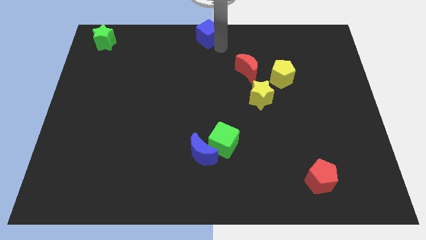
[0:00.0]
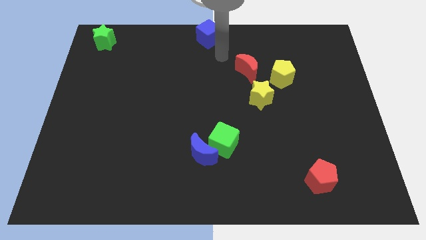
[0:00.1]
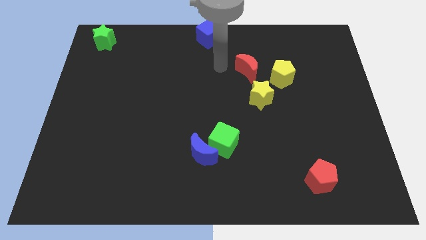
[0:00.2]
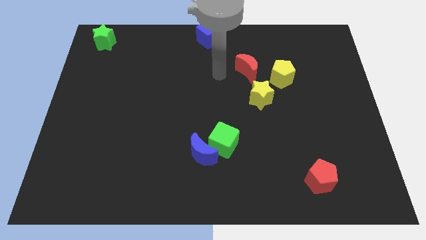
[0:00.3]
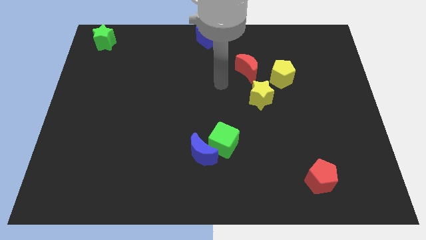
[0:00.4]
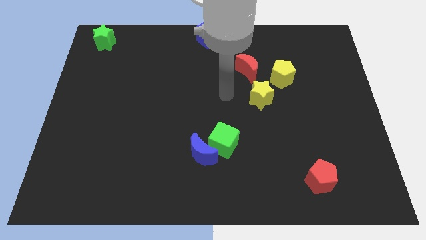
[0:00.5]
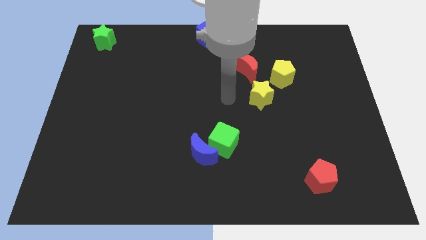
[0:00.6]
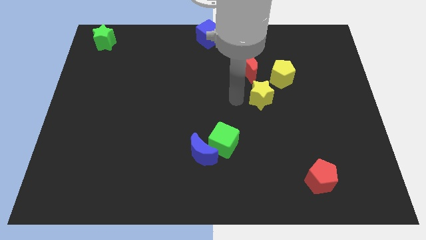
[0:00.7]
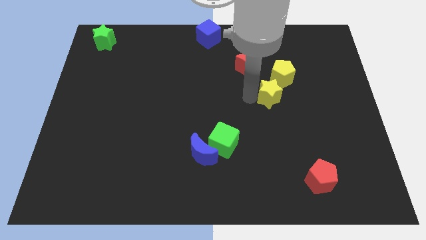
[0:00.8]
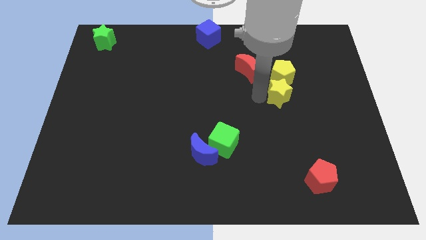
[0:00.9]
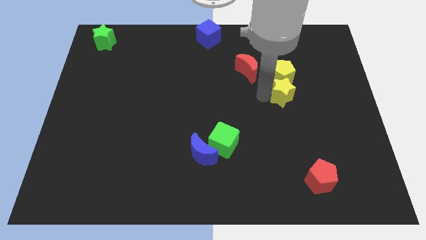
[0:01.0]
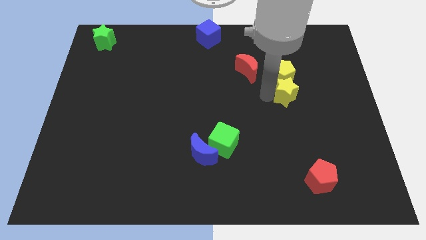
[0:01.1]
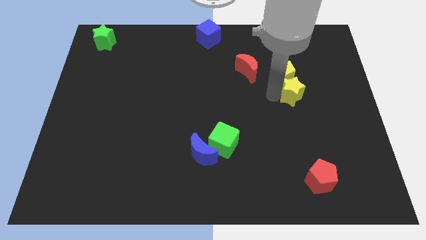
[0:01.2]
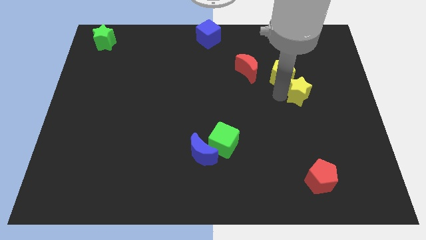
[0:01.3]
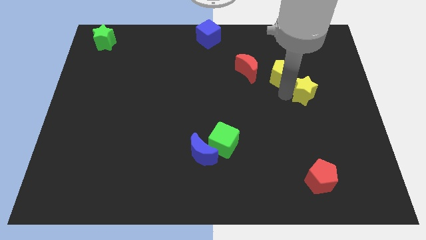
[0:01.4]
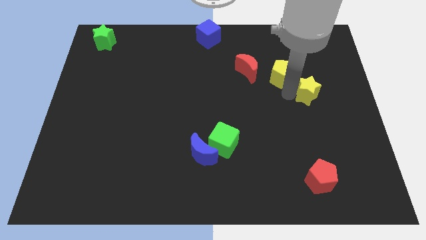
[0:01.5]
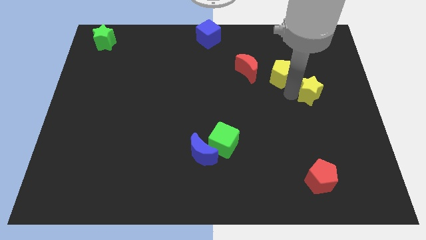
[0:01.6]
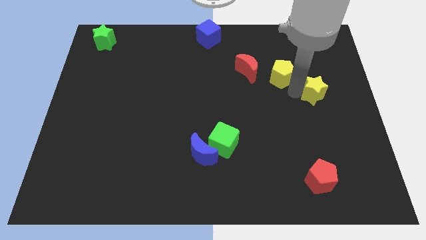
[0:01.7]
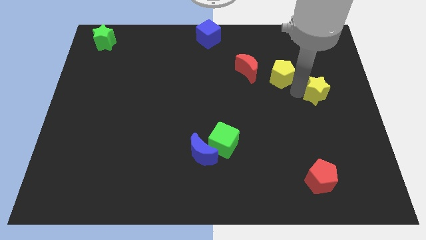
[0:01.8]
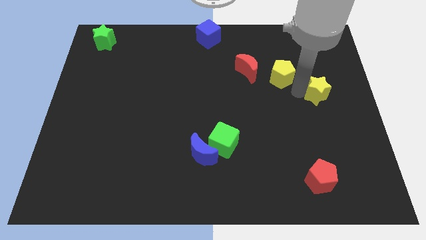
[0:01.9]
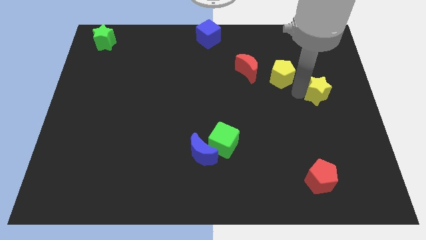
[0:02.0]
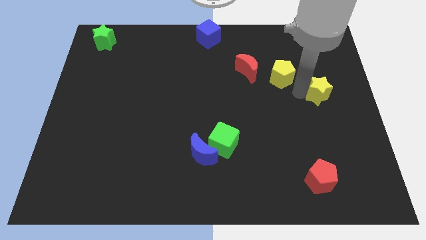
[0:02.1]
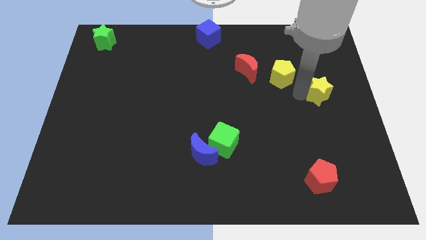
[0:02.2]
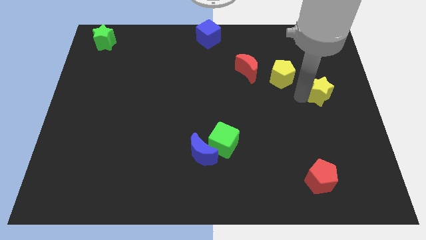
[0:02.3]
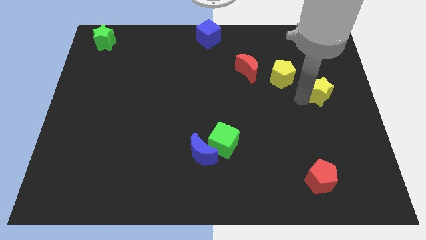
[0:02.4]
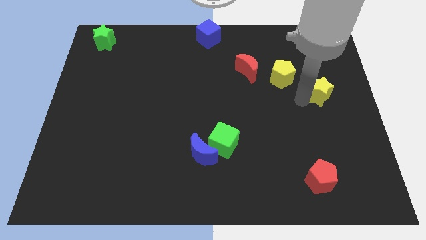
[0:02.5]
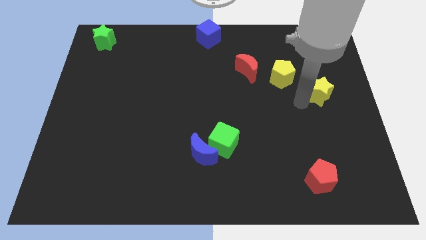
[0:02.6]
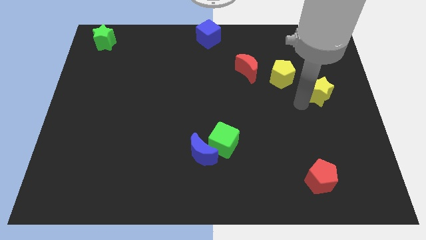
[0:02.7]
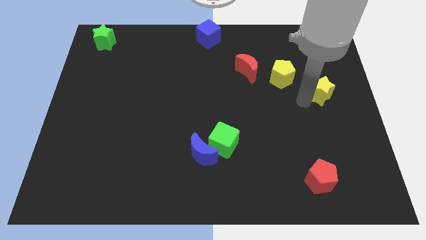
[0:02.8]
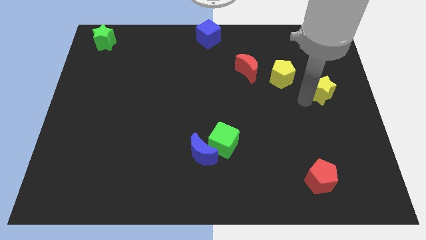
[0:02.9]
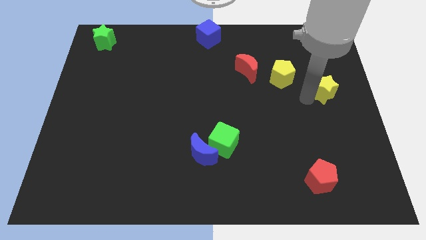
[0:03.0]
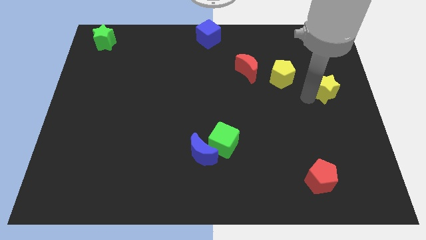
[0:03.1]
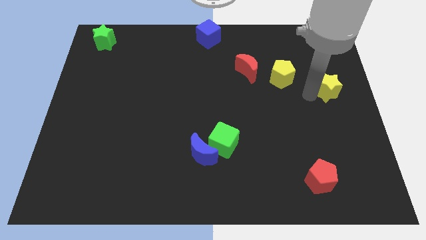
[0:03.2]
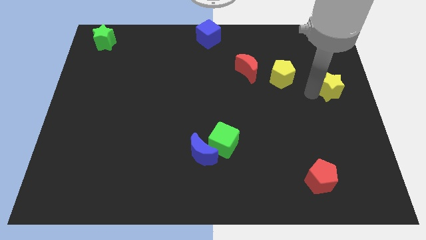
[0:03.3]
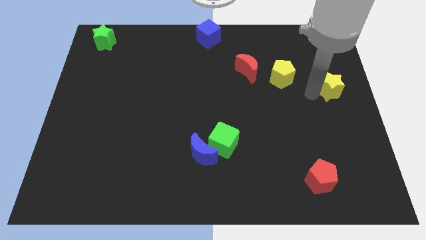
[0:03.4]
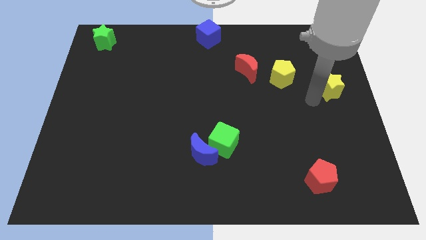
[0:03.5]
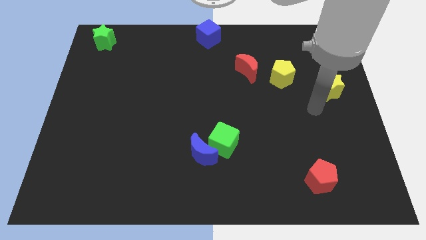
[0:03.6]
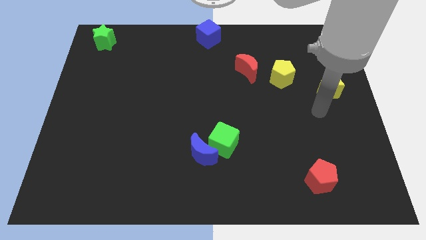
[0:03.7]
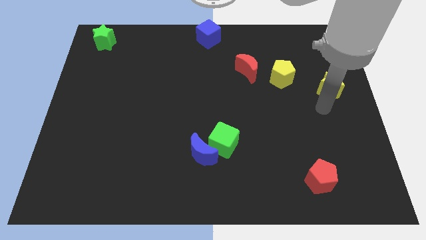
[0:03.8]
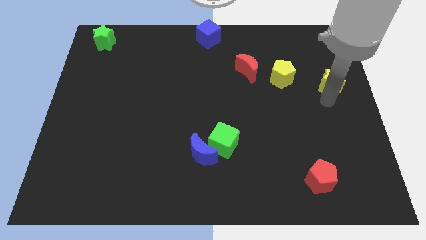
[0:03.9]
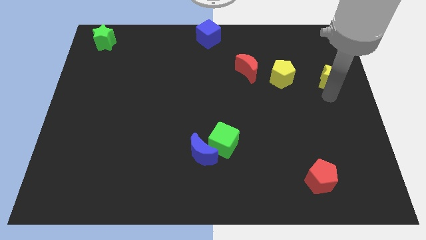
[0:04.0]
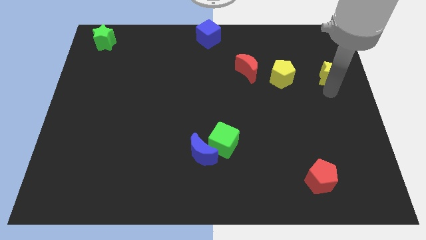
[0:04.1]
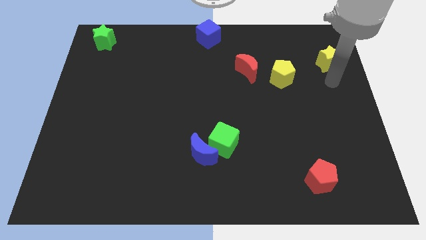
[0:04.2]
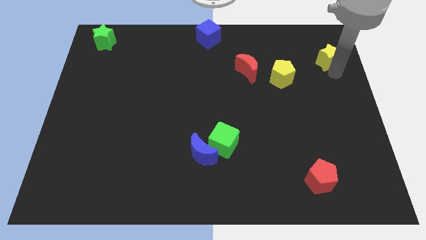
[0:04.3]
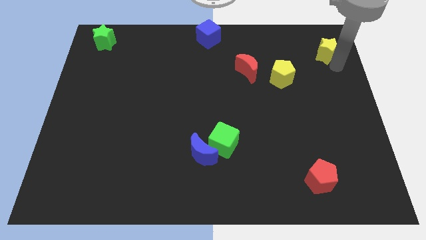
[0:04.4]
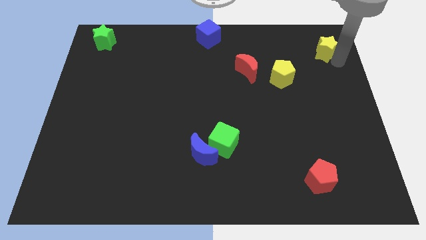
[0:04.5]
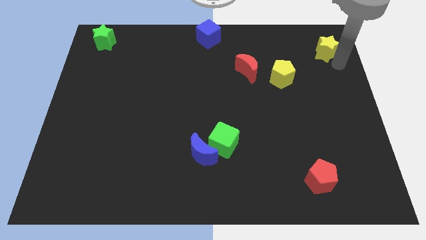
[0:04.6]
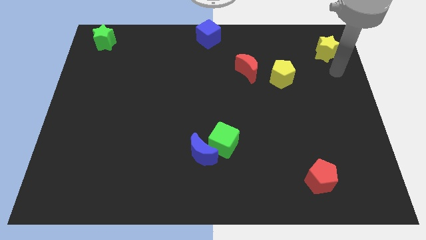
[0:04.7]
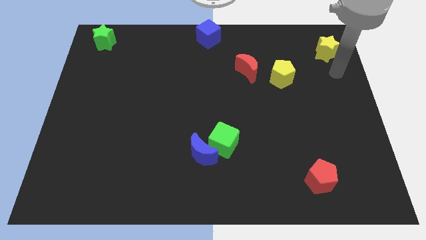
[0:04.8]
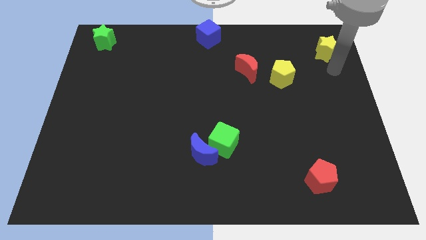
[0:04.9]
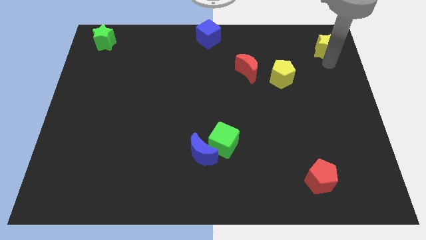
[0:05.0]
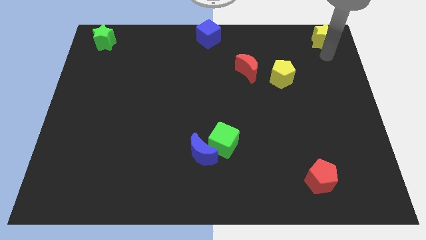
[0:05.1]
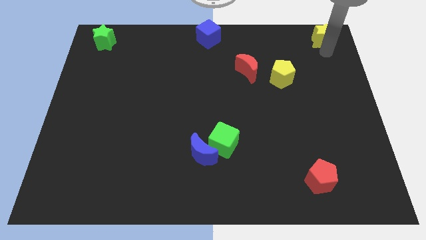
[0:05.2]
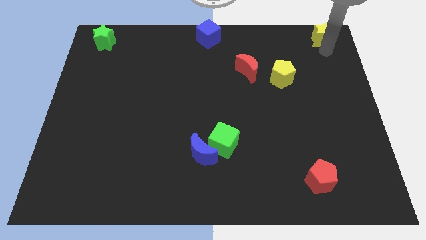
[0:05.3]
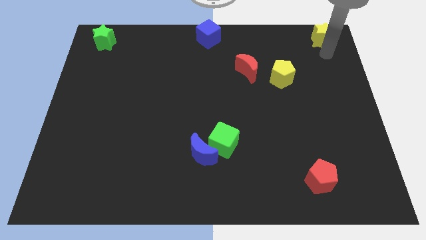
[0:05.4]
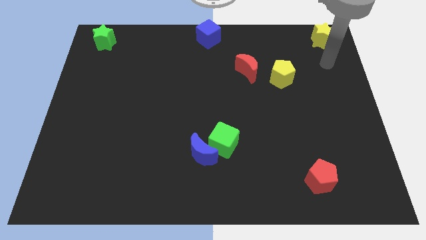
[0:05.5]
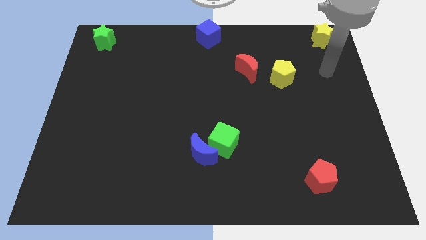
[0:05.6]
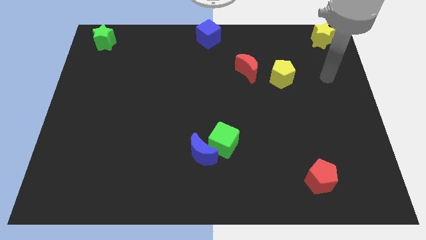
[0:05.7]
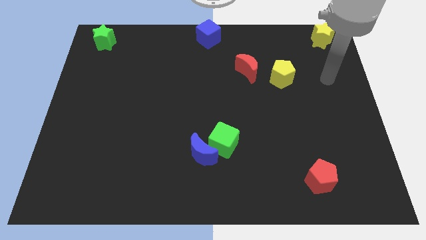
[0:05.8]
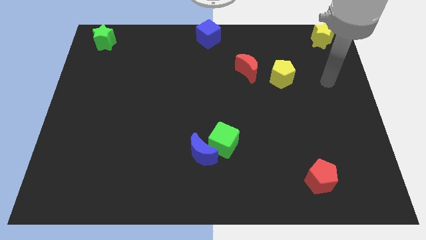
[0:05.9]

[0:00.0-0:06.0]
push the yellow star to the right of the blue cube

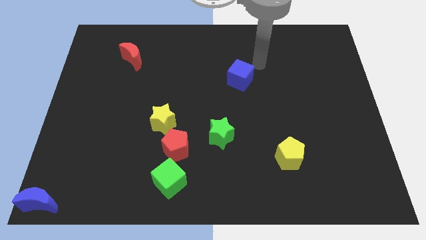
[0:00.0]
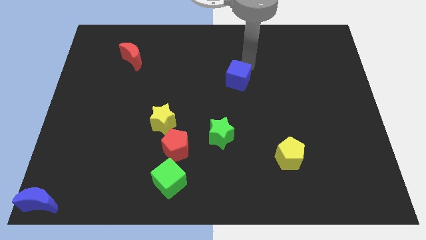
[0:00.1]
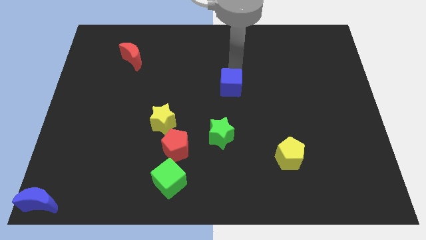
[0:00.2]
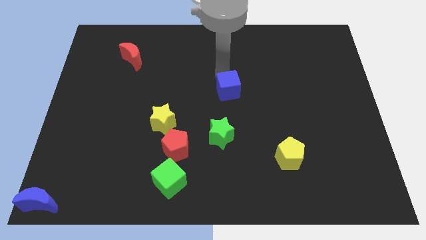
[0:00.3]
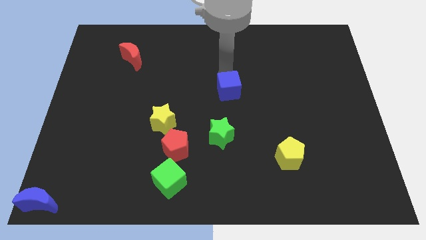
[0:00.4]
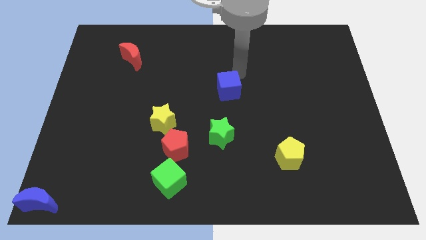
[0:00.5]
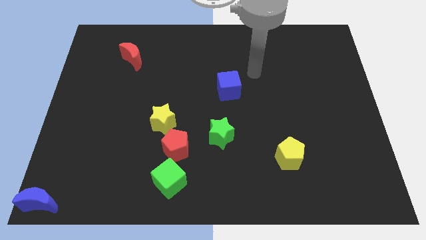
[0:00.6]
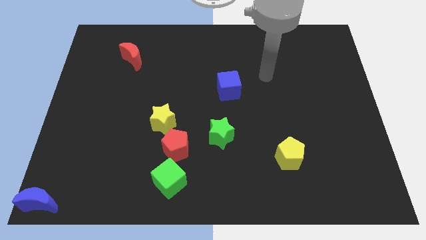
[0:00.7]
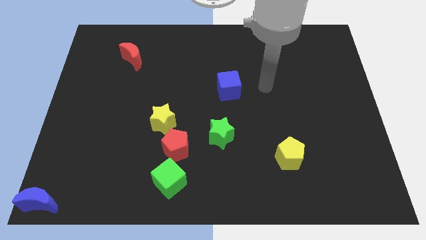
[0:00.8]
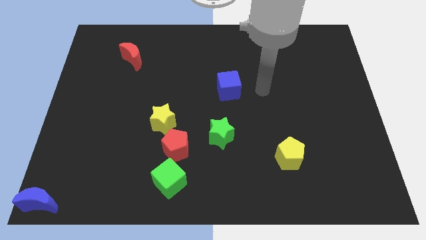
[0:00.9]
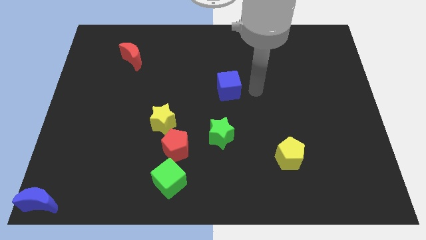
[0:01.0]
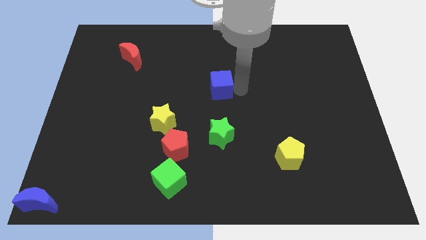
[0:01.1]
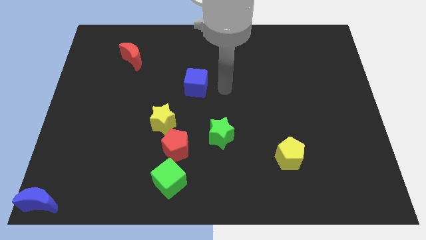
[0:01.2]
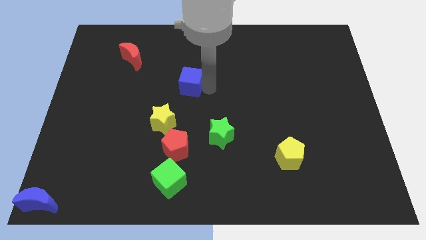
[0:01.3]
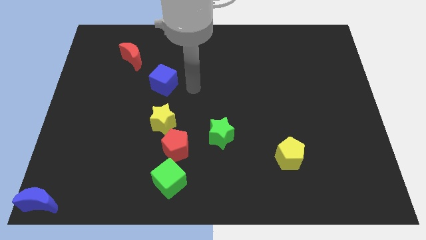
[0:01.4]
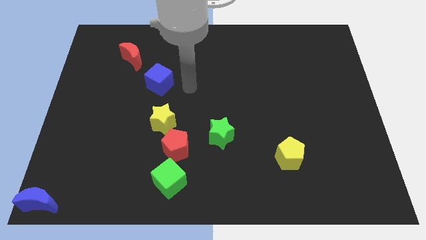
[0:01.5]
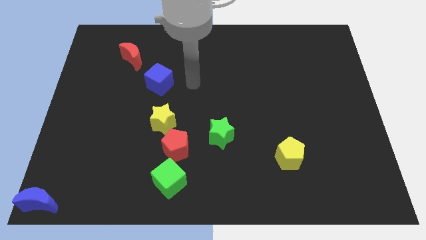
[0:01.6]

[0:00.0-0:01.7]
place the blue cube vertically above the yellow star

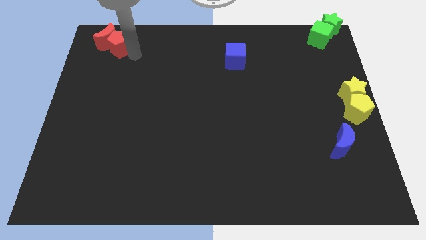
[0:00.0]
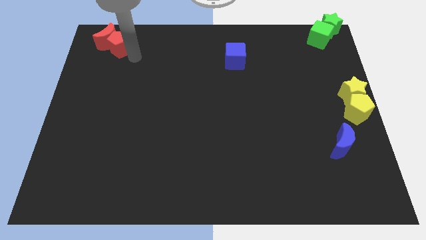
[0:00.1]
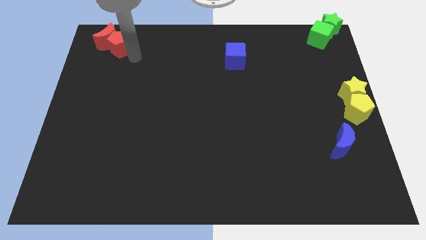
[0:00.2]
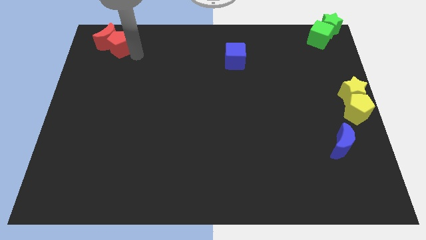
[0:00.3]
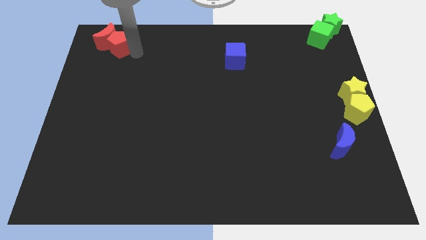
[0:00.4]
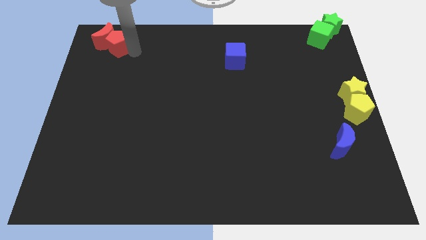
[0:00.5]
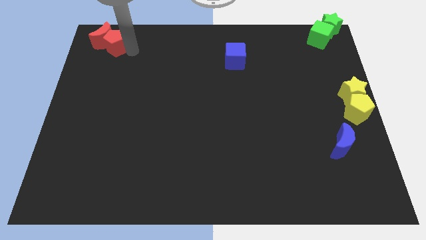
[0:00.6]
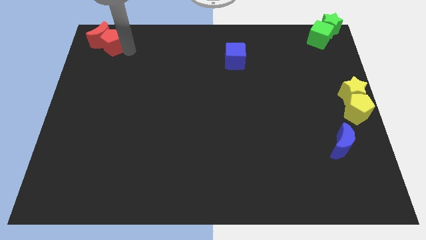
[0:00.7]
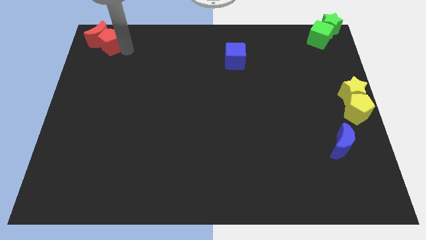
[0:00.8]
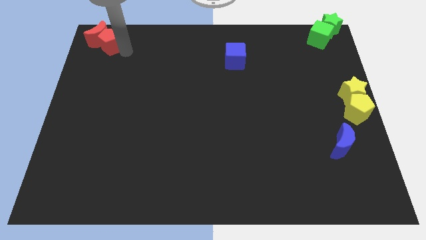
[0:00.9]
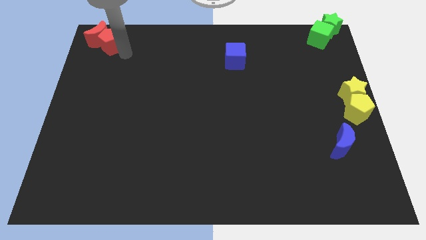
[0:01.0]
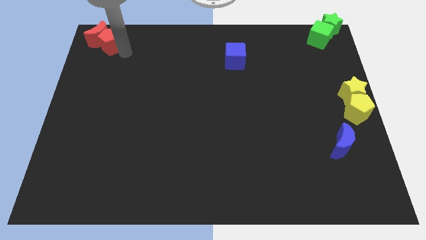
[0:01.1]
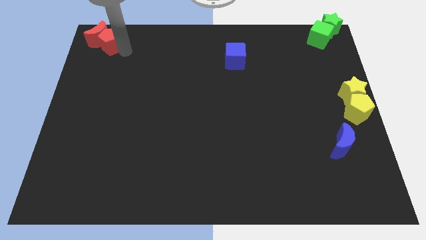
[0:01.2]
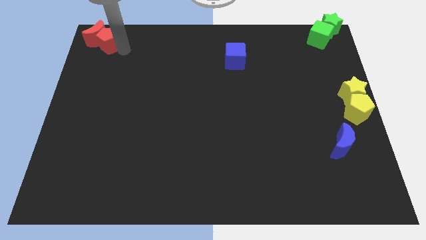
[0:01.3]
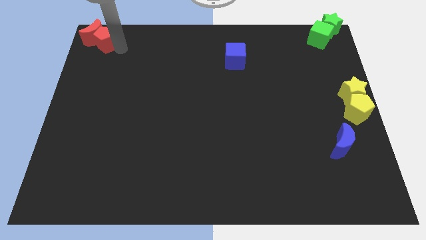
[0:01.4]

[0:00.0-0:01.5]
place red pentagon and red moon towards the top left corner of the board
